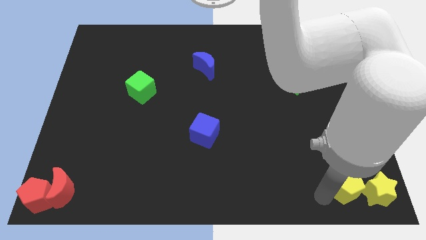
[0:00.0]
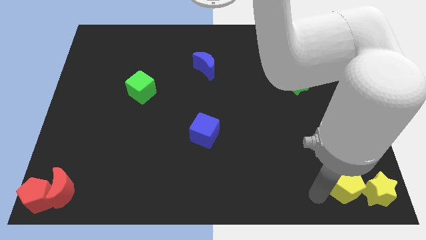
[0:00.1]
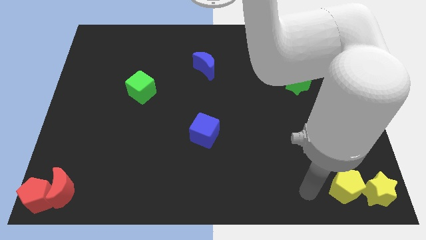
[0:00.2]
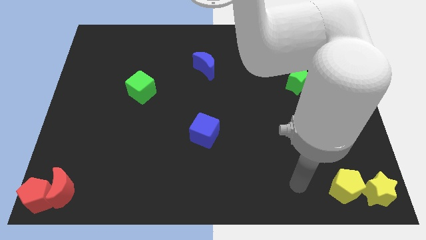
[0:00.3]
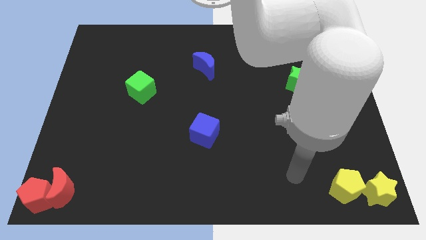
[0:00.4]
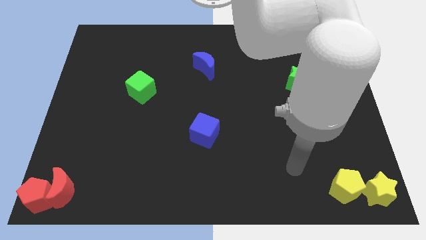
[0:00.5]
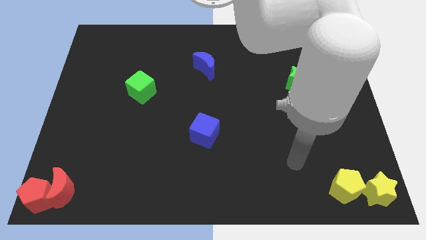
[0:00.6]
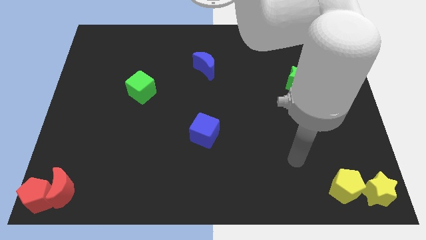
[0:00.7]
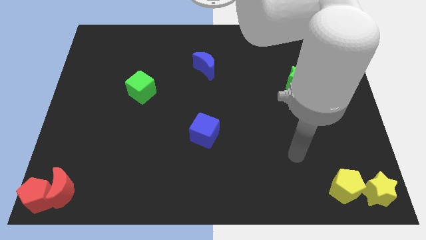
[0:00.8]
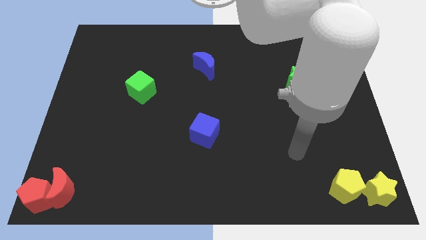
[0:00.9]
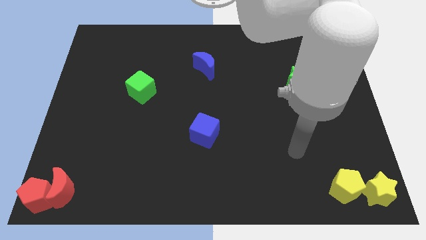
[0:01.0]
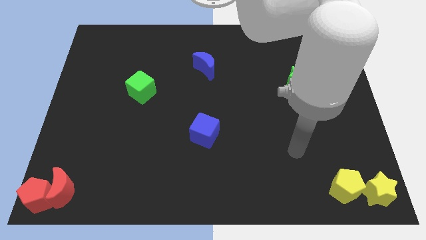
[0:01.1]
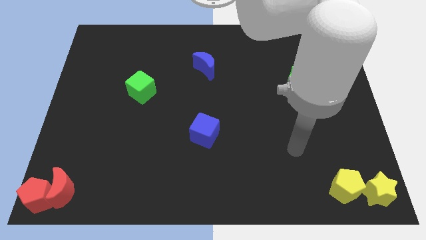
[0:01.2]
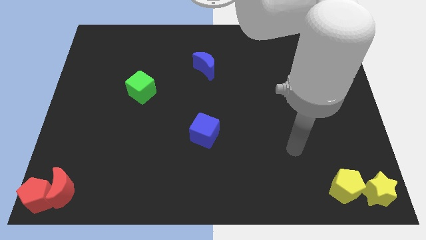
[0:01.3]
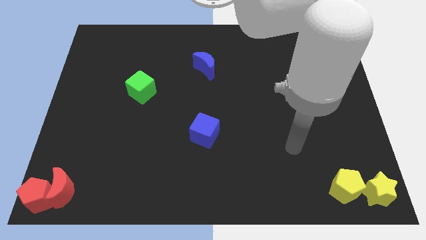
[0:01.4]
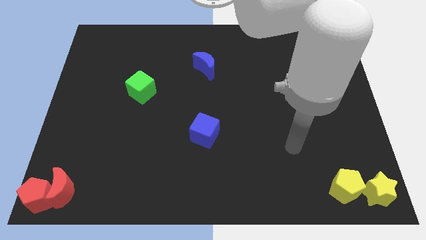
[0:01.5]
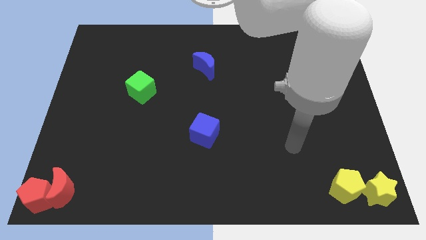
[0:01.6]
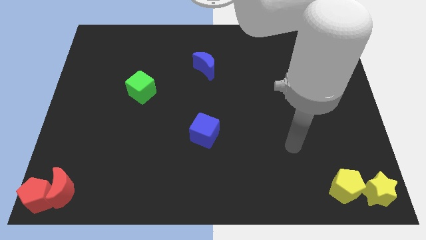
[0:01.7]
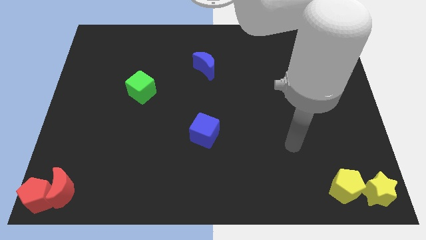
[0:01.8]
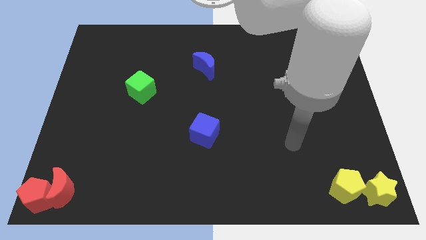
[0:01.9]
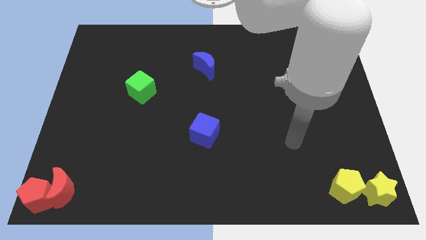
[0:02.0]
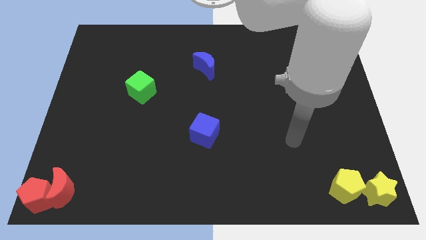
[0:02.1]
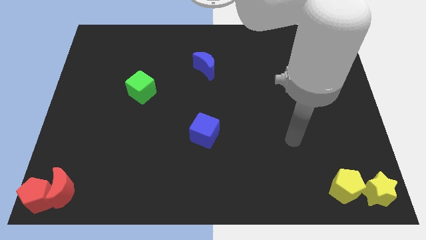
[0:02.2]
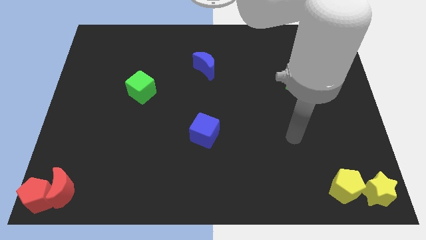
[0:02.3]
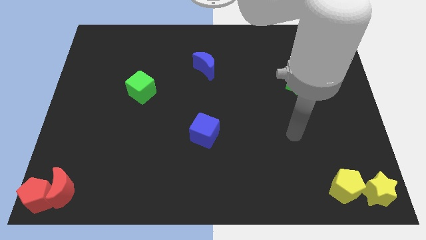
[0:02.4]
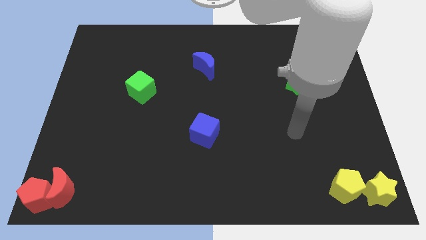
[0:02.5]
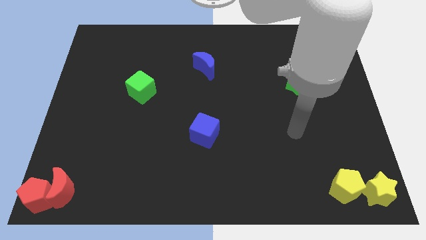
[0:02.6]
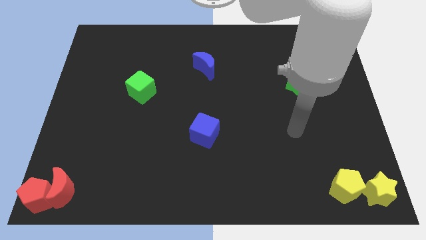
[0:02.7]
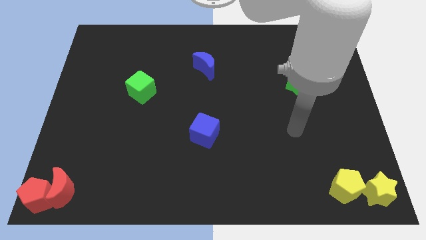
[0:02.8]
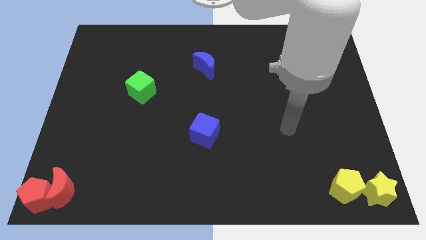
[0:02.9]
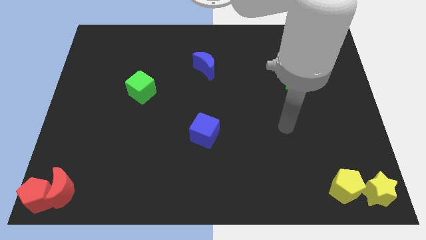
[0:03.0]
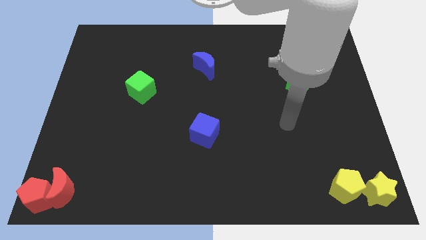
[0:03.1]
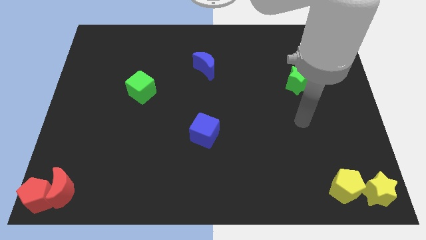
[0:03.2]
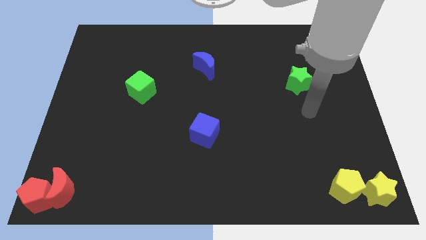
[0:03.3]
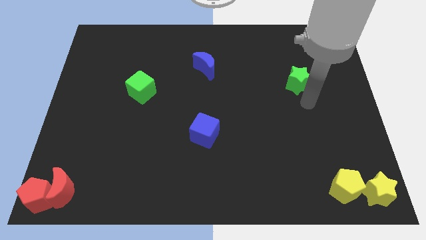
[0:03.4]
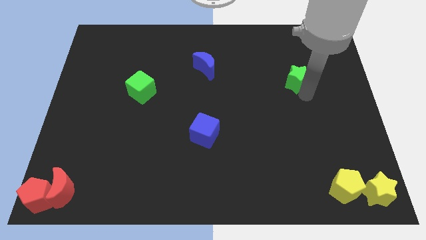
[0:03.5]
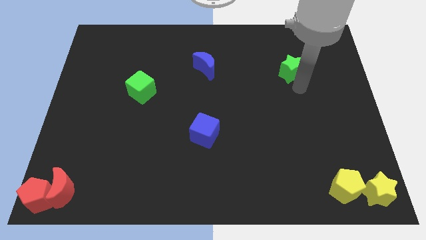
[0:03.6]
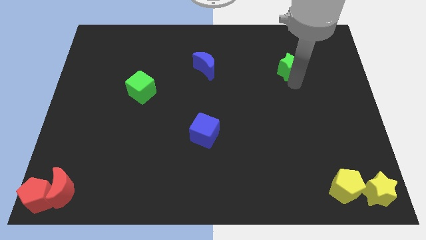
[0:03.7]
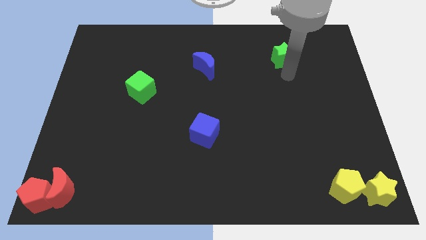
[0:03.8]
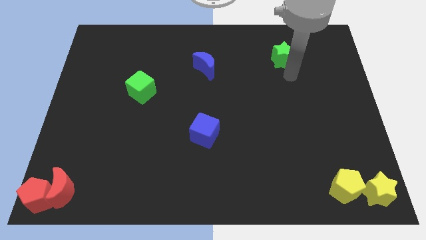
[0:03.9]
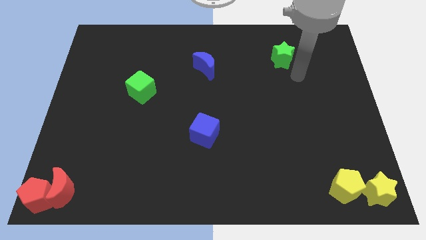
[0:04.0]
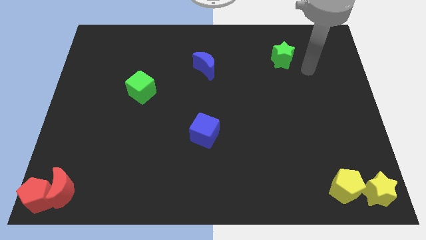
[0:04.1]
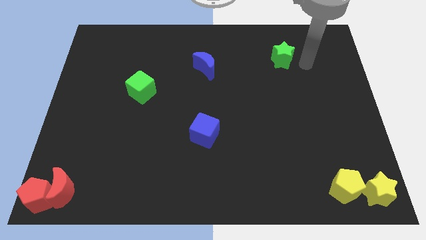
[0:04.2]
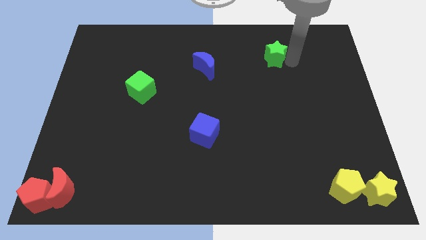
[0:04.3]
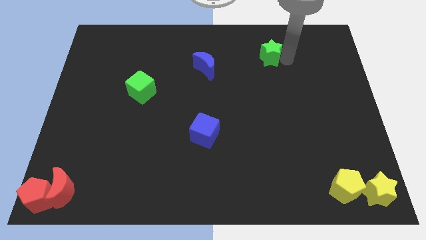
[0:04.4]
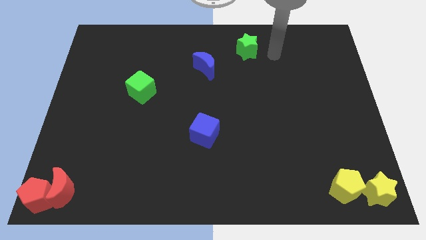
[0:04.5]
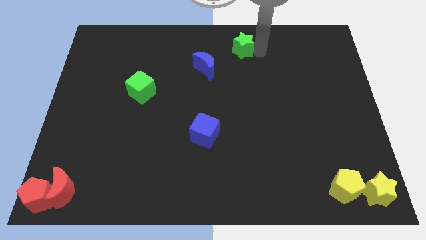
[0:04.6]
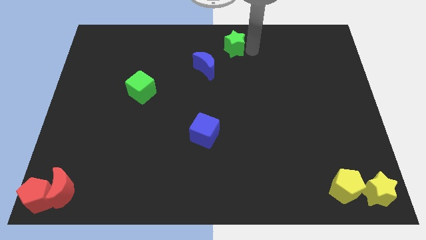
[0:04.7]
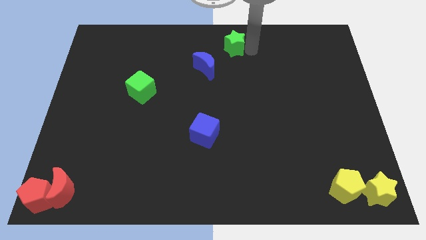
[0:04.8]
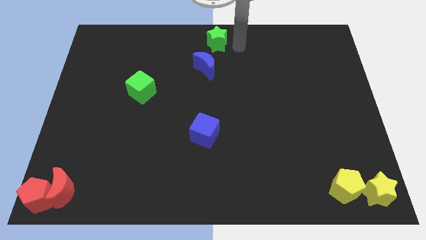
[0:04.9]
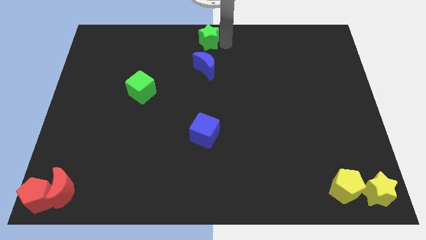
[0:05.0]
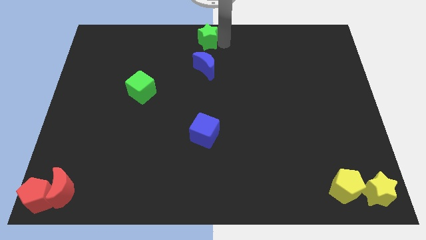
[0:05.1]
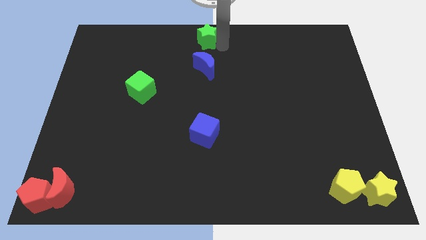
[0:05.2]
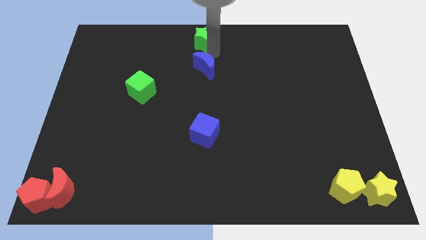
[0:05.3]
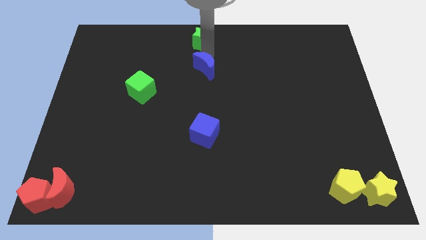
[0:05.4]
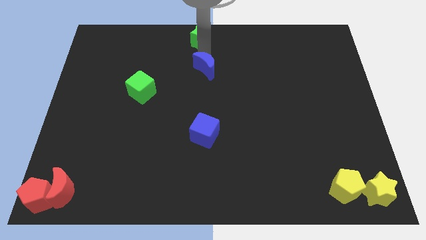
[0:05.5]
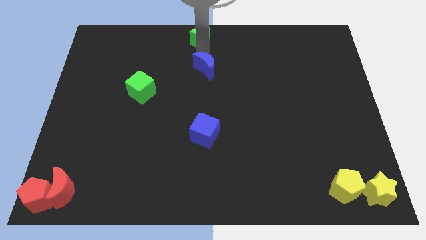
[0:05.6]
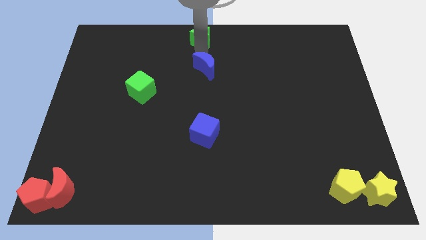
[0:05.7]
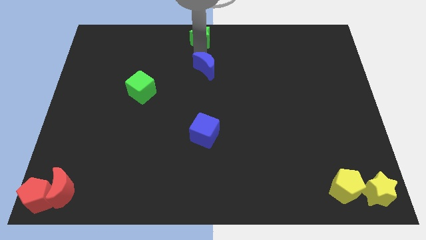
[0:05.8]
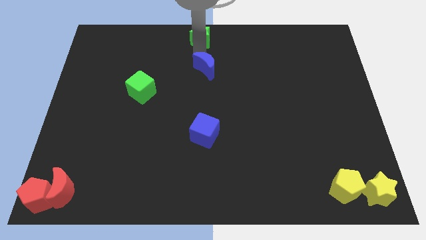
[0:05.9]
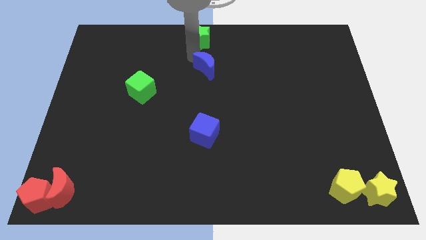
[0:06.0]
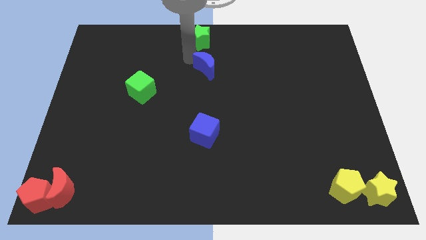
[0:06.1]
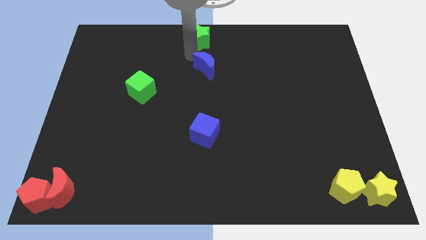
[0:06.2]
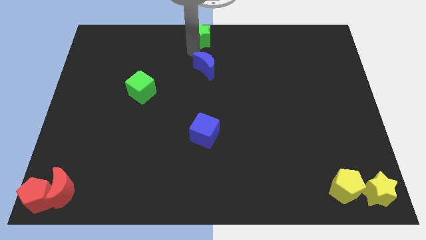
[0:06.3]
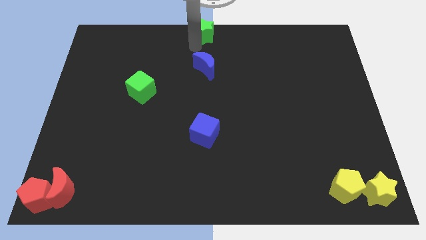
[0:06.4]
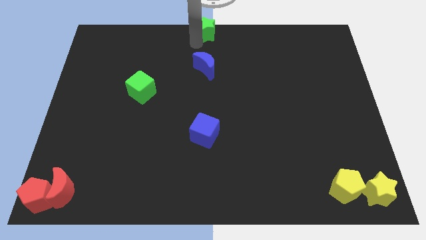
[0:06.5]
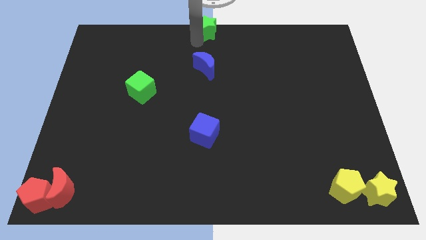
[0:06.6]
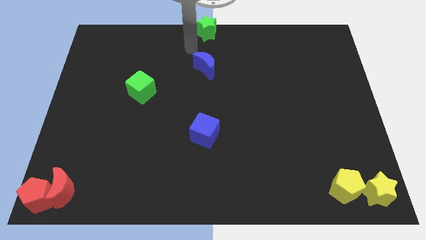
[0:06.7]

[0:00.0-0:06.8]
push the green star to the top center of the board

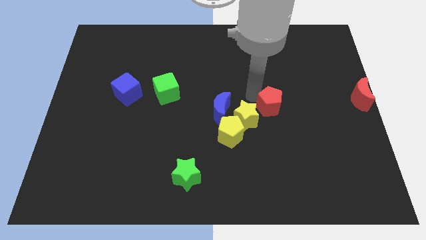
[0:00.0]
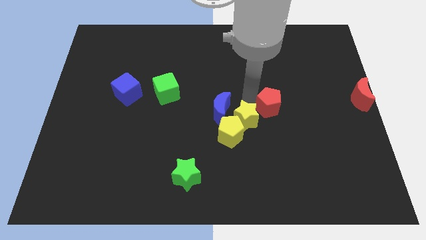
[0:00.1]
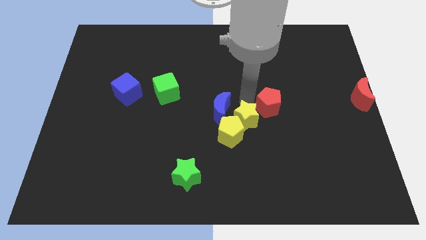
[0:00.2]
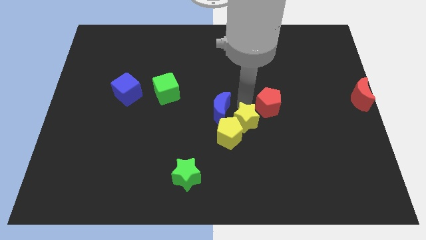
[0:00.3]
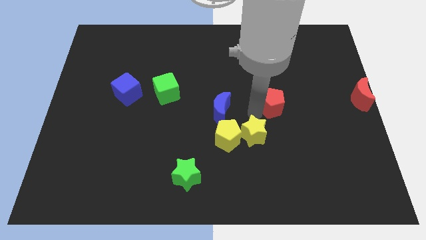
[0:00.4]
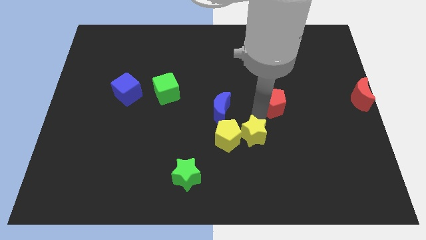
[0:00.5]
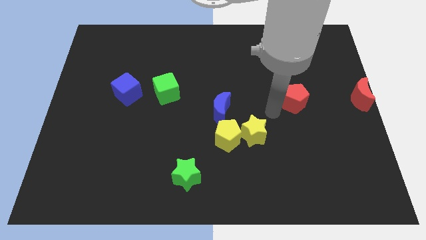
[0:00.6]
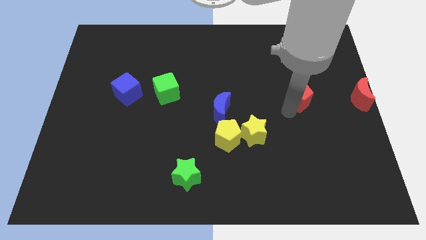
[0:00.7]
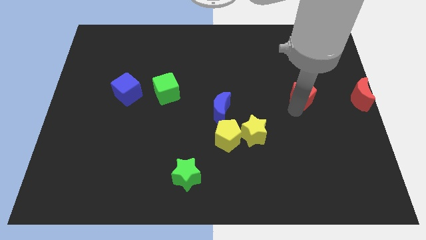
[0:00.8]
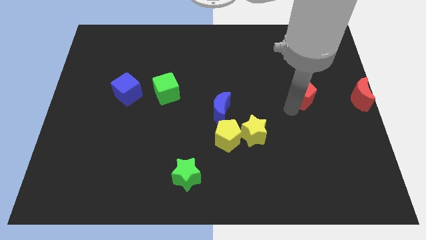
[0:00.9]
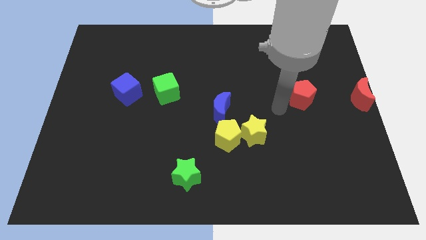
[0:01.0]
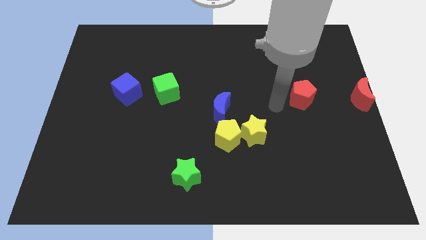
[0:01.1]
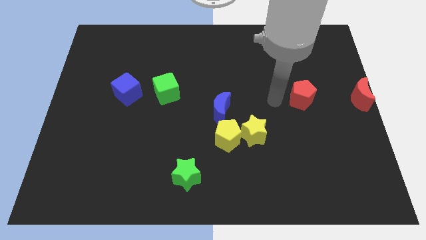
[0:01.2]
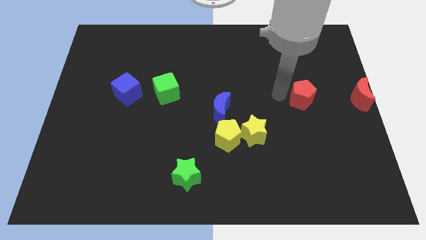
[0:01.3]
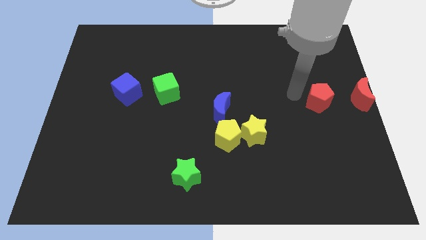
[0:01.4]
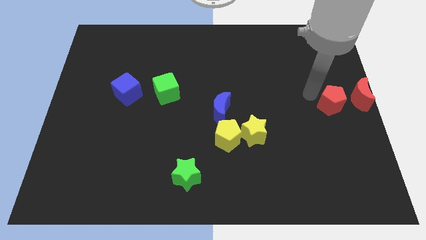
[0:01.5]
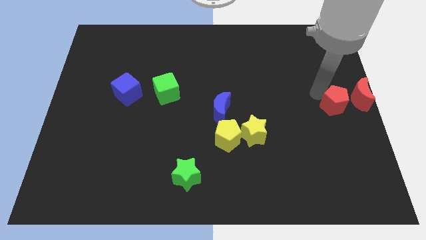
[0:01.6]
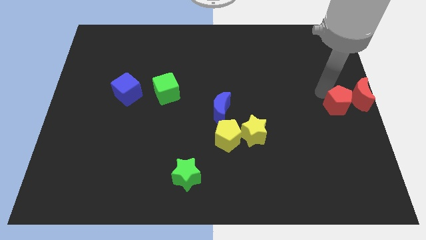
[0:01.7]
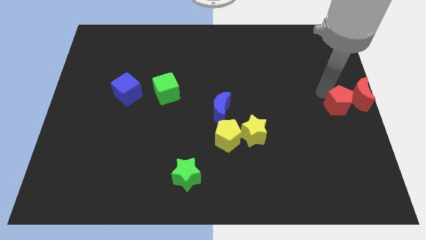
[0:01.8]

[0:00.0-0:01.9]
place the red pentagon beside the red crescent

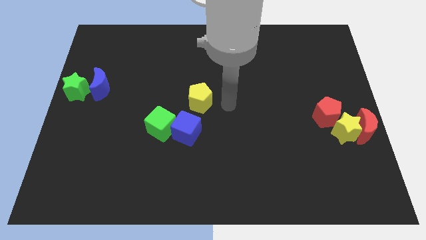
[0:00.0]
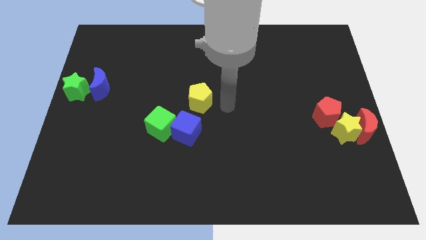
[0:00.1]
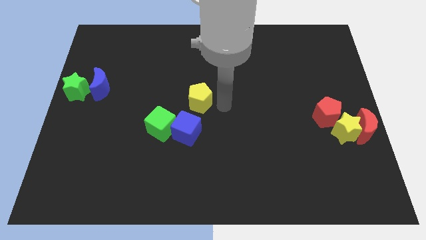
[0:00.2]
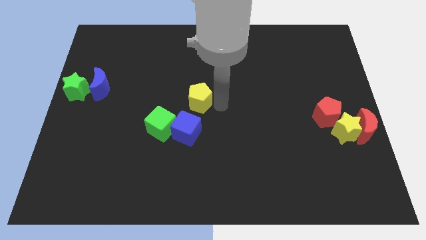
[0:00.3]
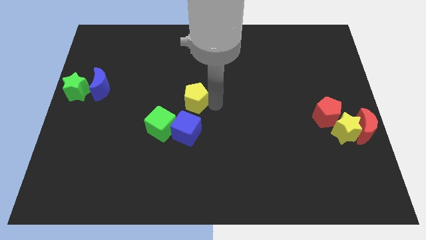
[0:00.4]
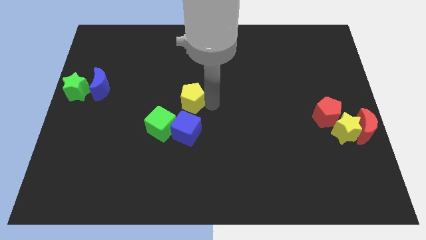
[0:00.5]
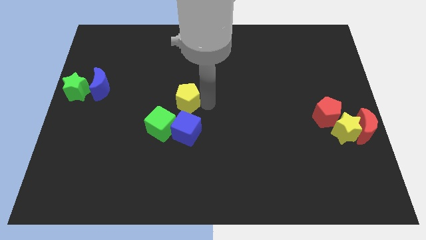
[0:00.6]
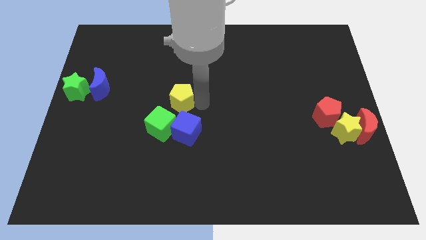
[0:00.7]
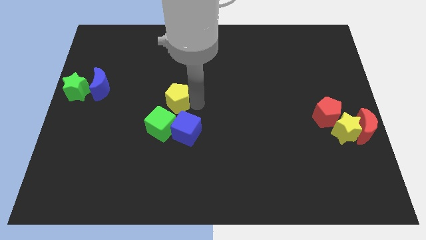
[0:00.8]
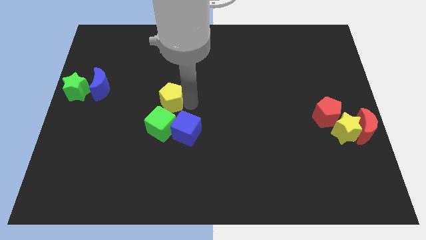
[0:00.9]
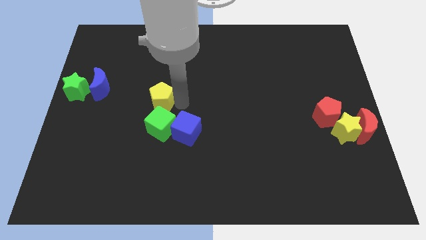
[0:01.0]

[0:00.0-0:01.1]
place yellow pentagon above green cube
